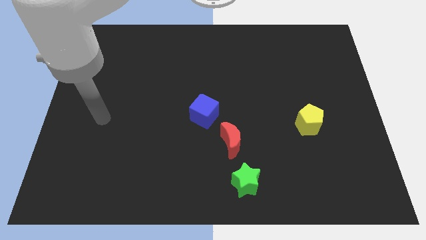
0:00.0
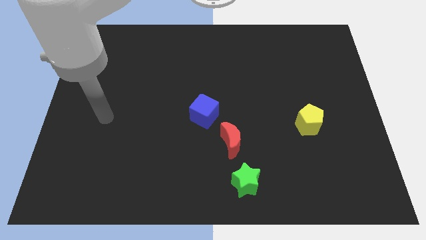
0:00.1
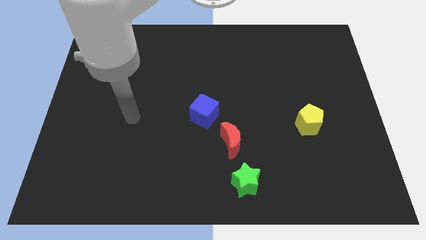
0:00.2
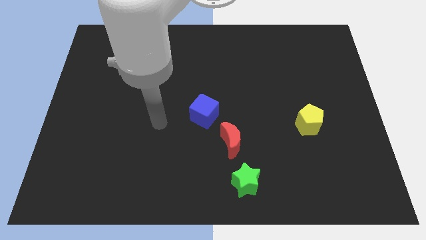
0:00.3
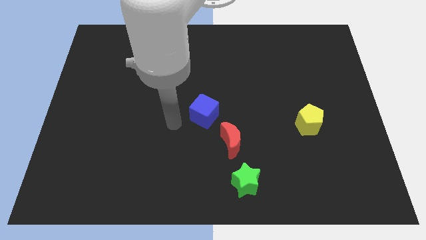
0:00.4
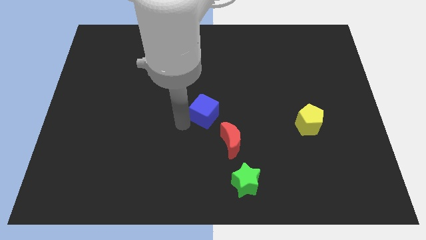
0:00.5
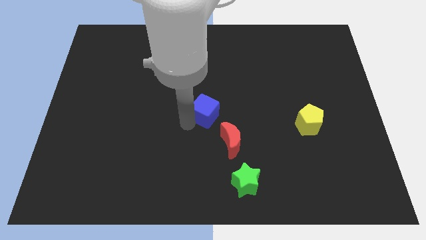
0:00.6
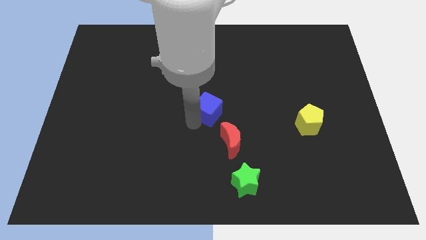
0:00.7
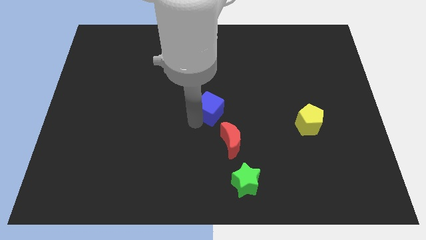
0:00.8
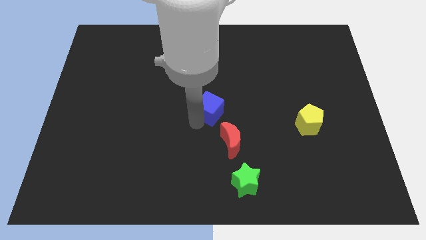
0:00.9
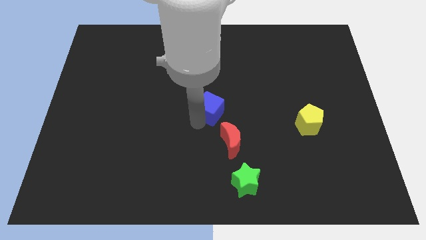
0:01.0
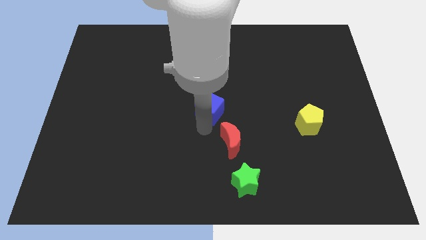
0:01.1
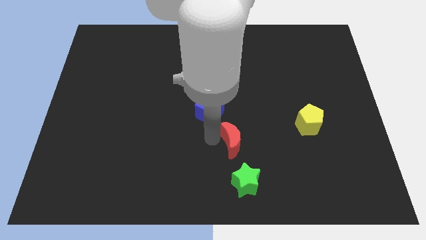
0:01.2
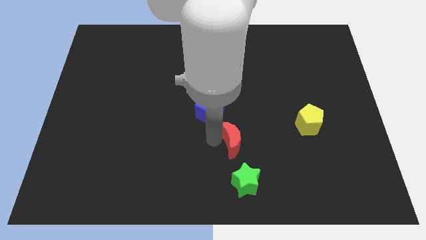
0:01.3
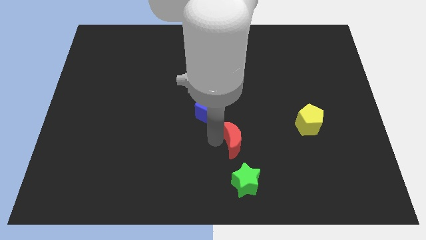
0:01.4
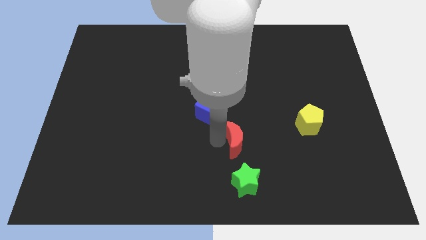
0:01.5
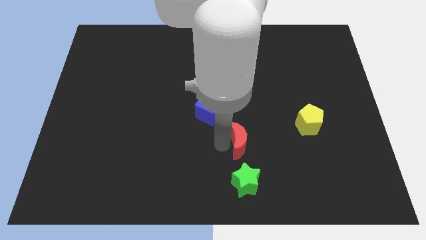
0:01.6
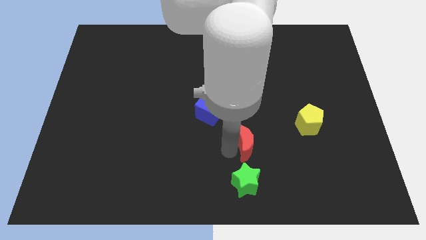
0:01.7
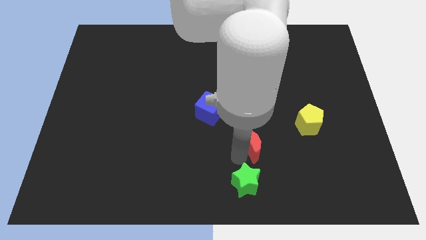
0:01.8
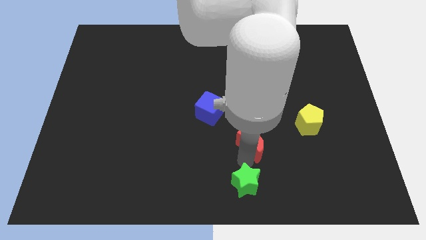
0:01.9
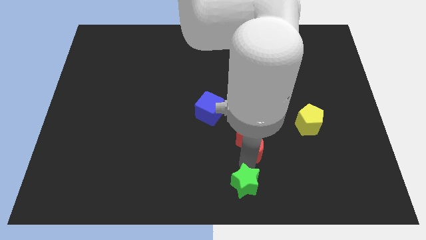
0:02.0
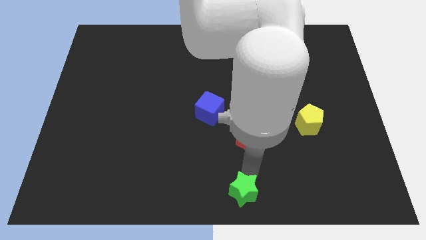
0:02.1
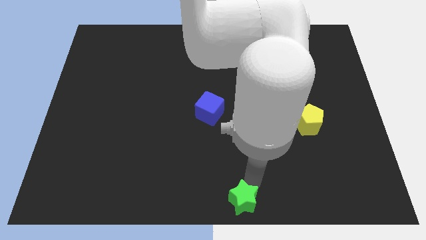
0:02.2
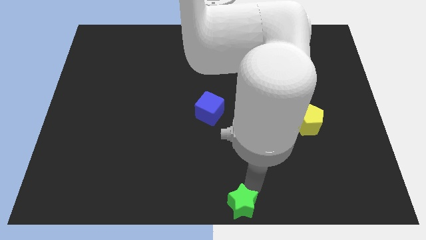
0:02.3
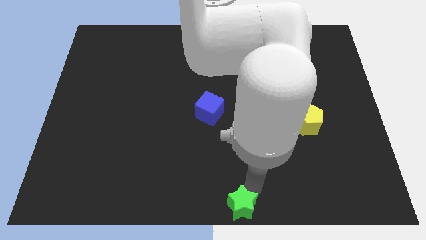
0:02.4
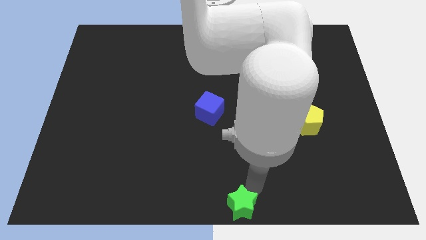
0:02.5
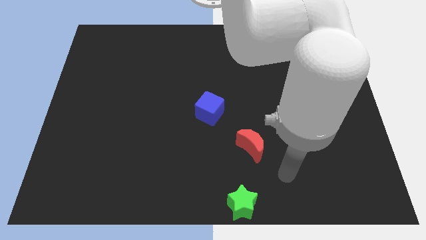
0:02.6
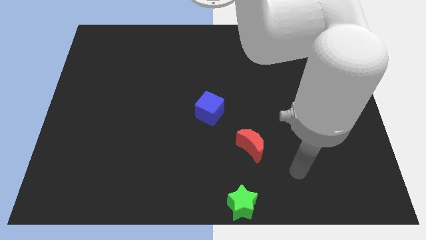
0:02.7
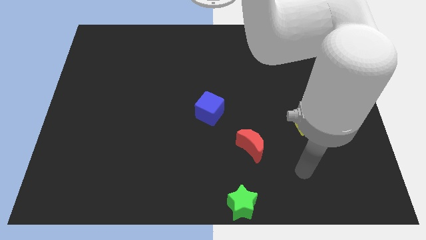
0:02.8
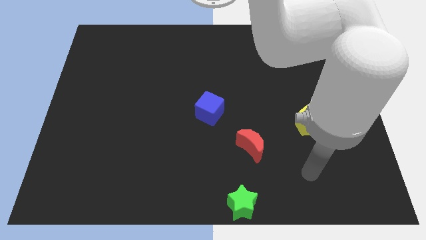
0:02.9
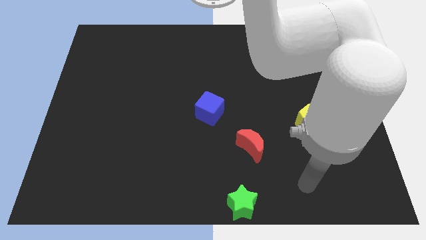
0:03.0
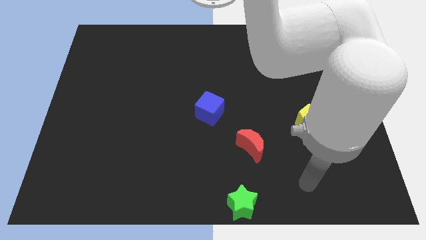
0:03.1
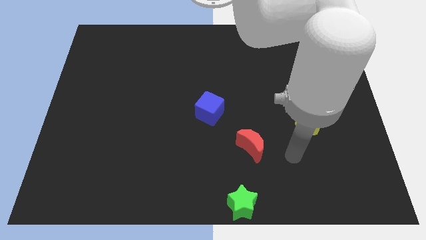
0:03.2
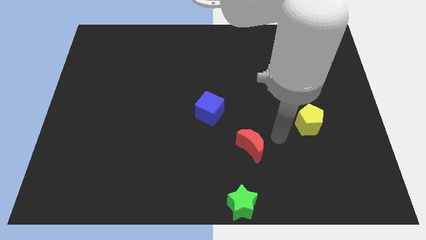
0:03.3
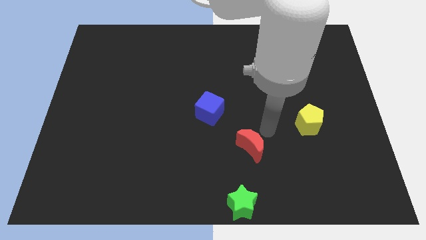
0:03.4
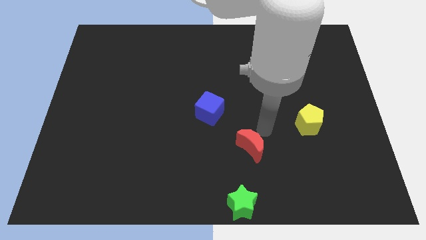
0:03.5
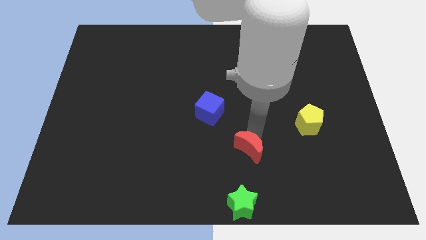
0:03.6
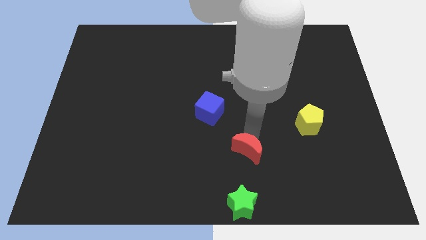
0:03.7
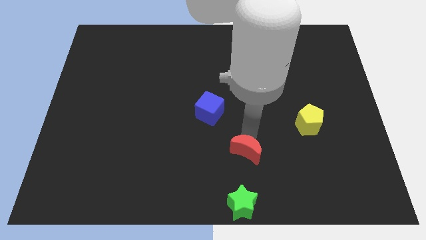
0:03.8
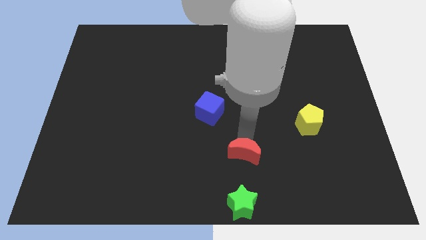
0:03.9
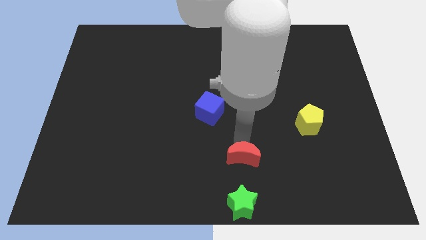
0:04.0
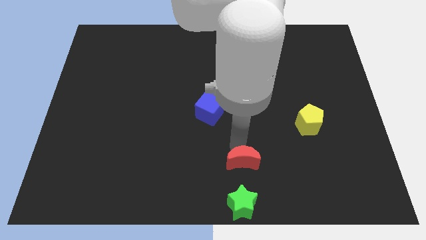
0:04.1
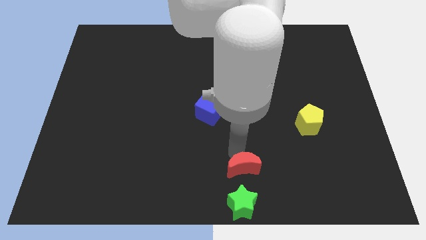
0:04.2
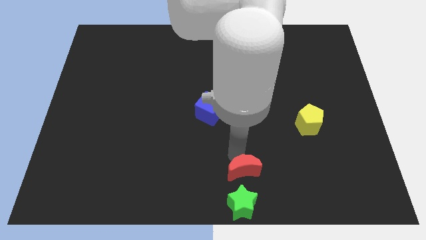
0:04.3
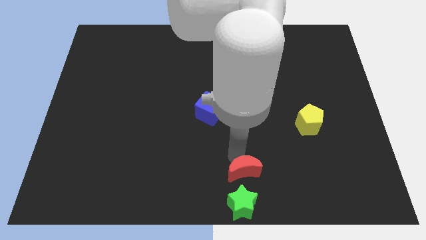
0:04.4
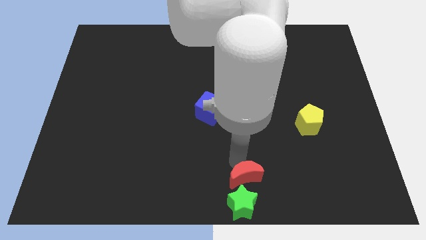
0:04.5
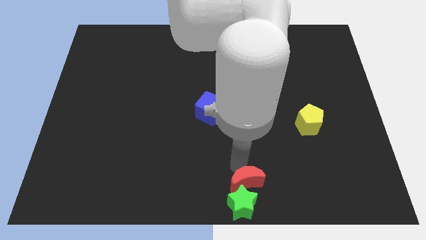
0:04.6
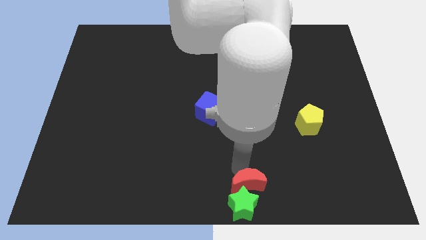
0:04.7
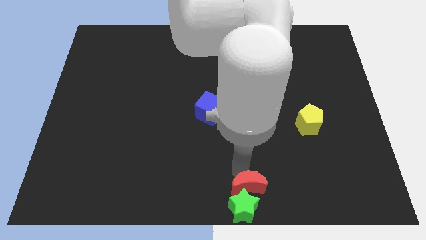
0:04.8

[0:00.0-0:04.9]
slide the red block next to the green block

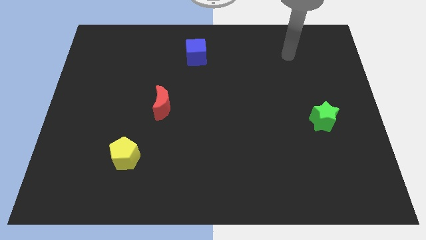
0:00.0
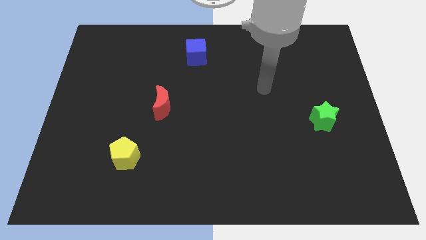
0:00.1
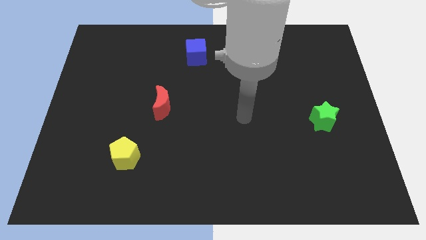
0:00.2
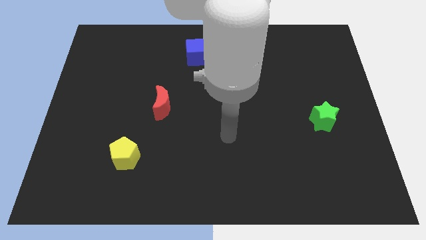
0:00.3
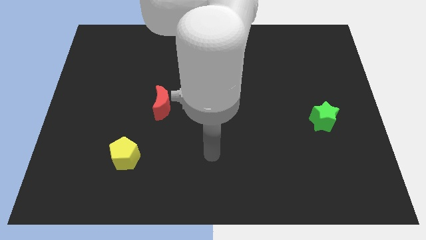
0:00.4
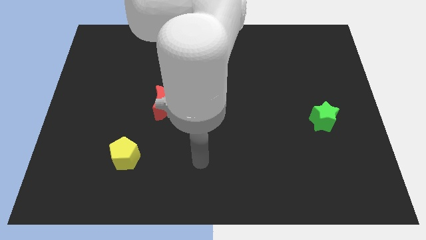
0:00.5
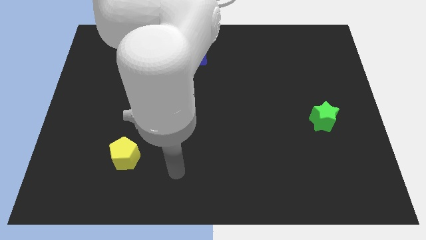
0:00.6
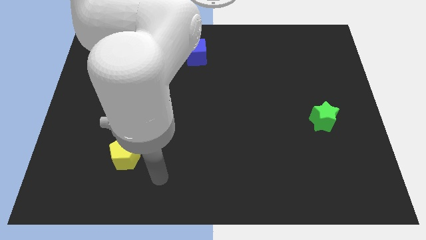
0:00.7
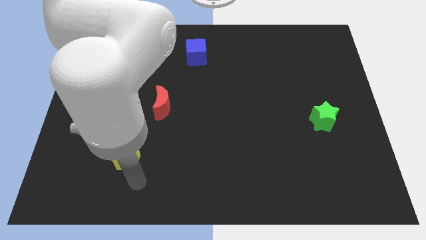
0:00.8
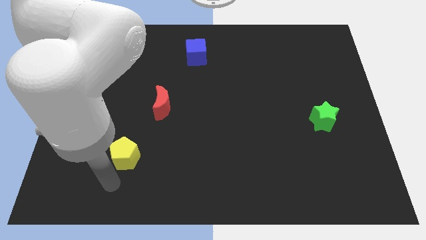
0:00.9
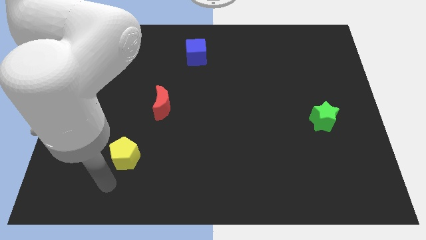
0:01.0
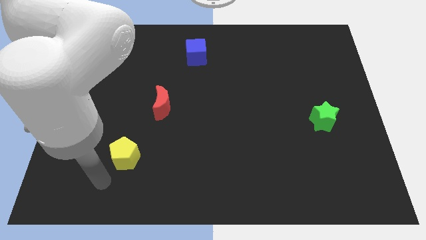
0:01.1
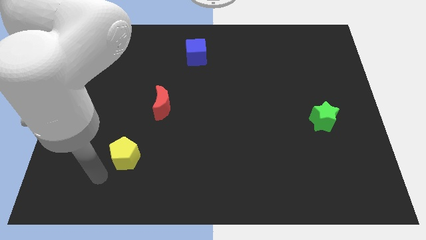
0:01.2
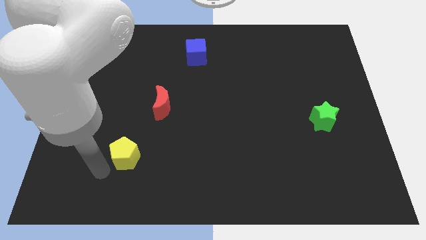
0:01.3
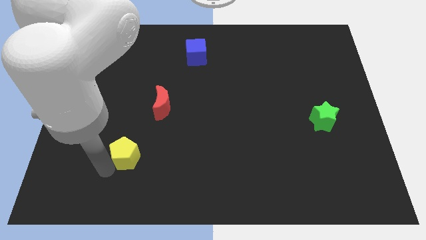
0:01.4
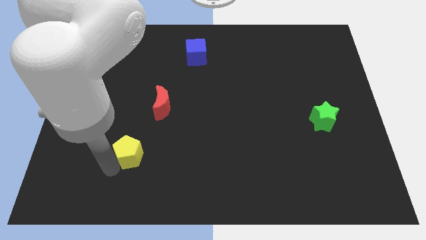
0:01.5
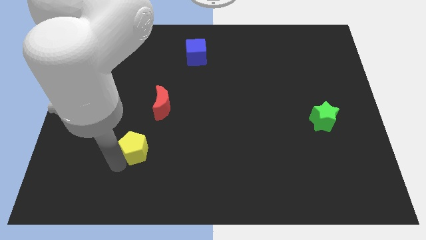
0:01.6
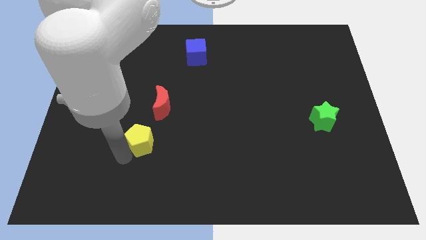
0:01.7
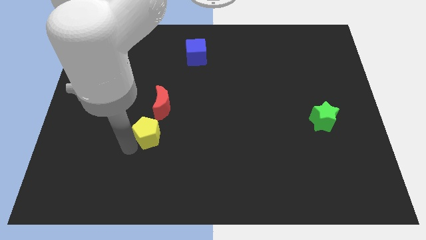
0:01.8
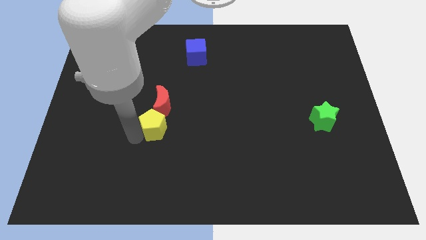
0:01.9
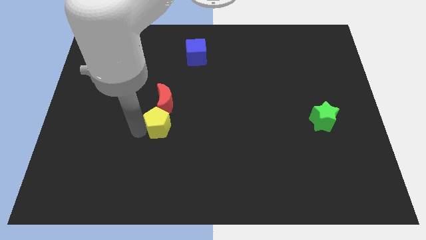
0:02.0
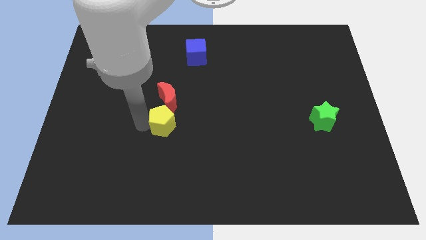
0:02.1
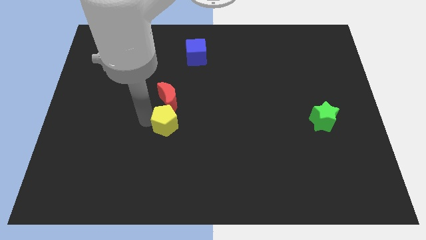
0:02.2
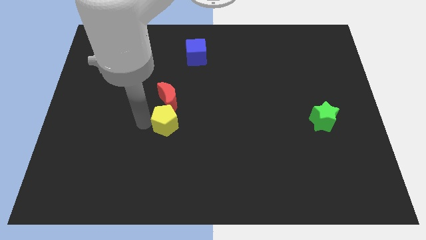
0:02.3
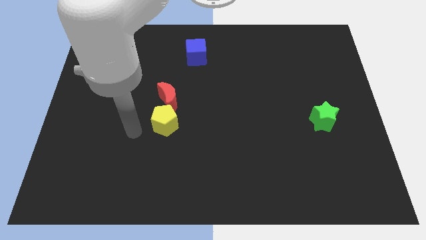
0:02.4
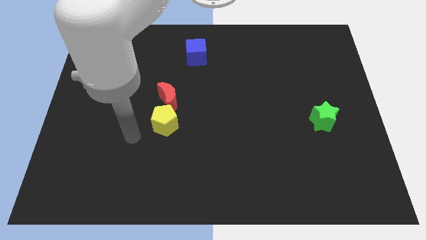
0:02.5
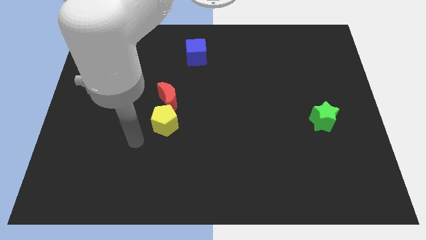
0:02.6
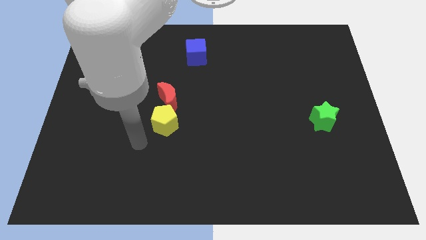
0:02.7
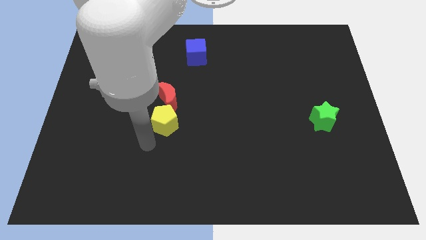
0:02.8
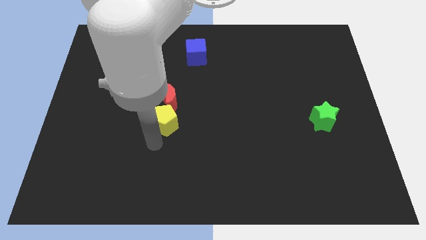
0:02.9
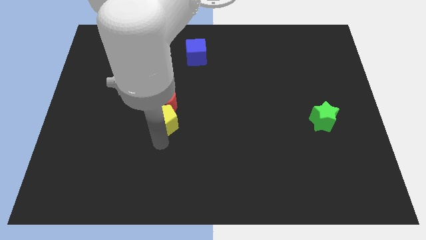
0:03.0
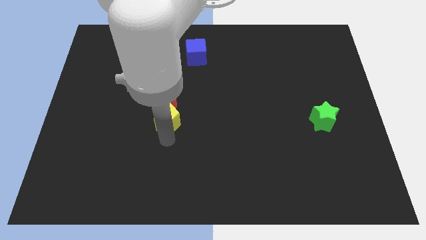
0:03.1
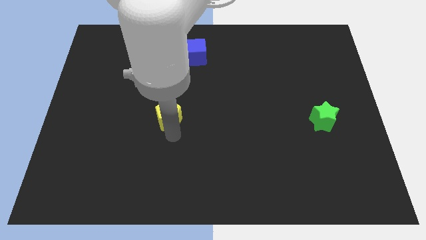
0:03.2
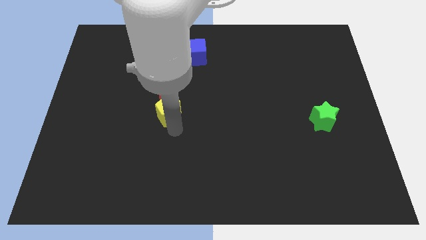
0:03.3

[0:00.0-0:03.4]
move the yellow pentagon to the red moon

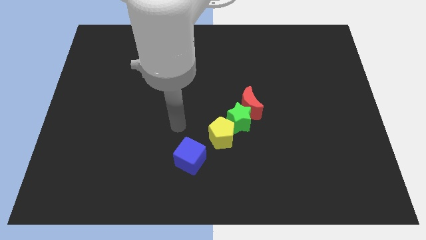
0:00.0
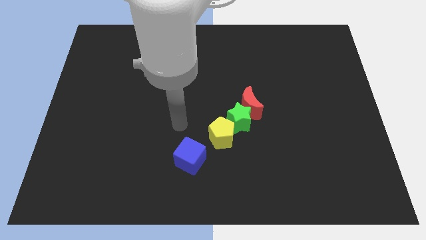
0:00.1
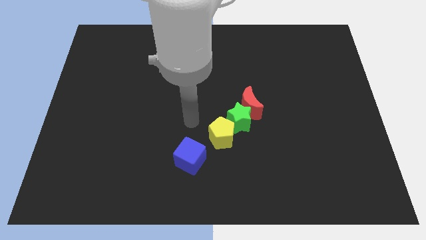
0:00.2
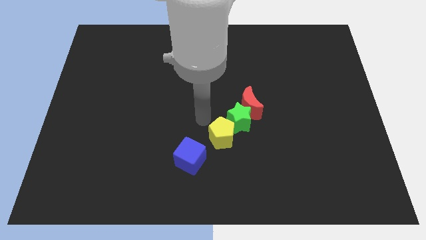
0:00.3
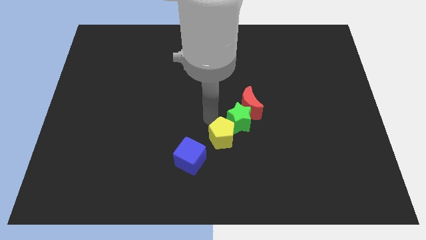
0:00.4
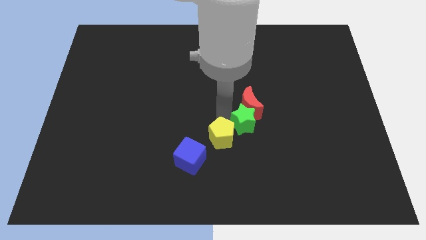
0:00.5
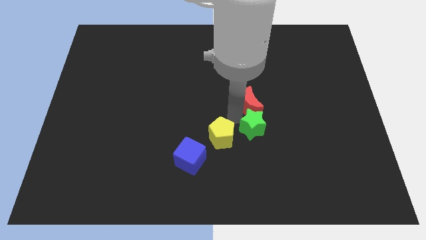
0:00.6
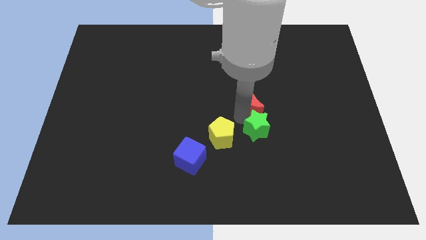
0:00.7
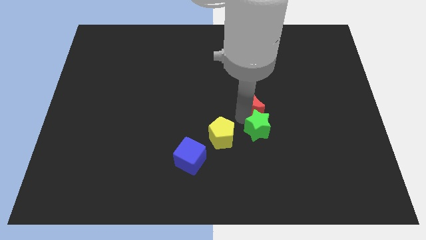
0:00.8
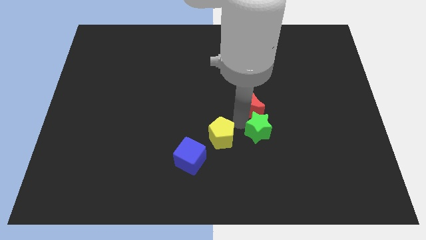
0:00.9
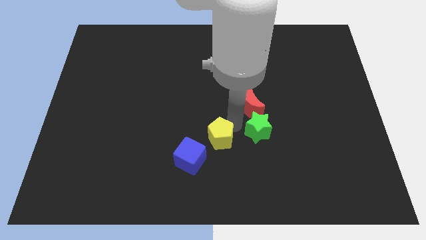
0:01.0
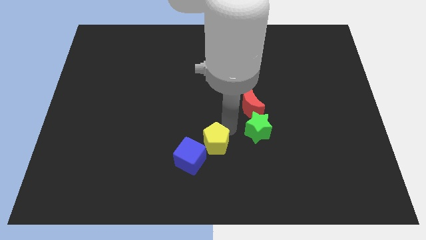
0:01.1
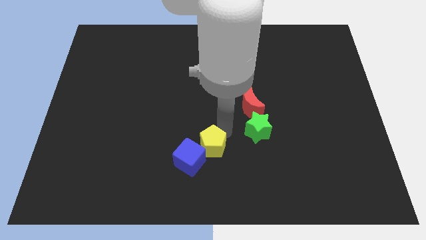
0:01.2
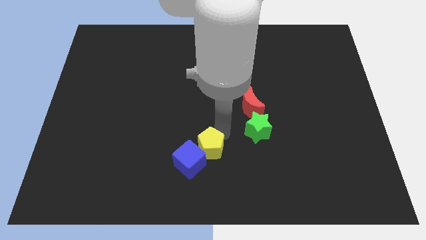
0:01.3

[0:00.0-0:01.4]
put the yellow pentagon close to the blue block
